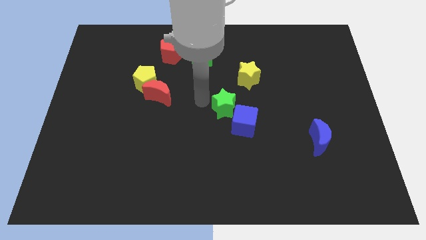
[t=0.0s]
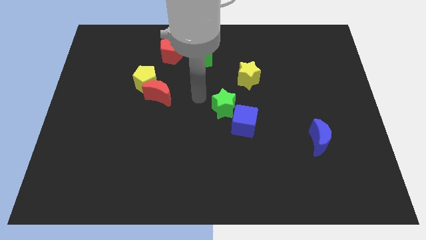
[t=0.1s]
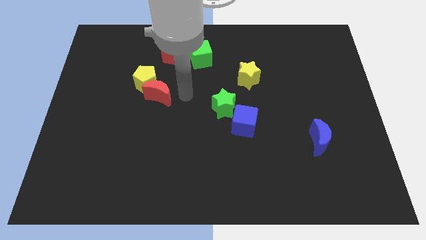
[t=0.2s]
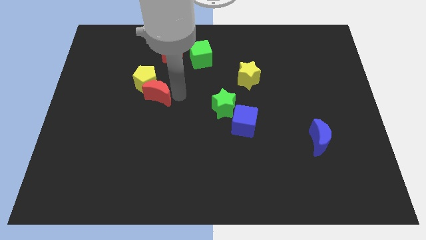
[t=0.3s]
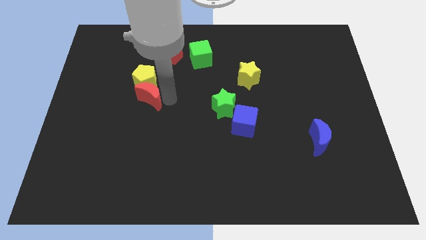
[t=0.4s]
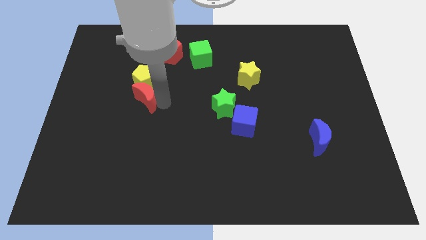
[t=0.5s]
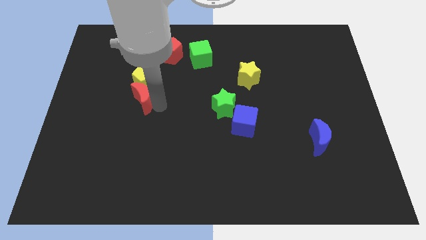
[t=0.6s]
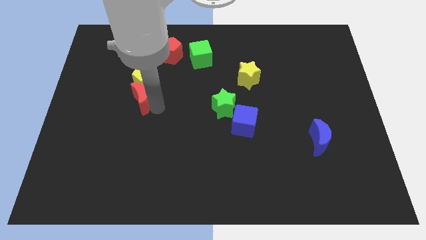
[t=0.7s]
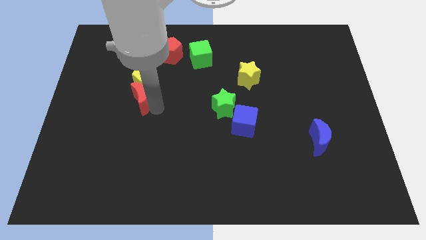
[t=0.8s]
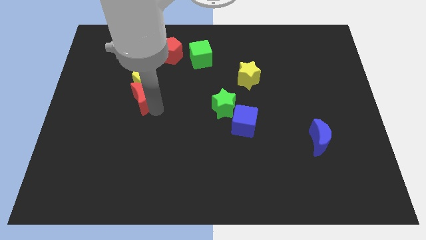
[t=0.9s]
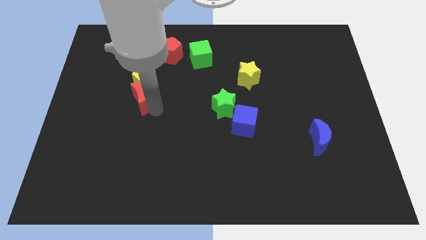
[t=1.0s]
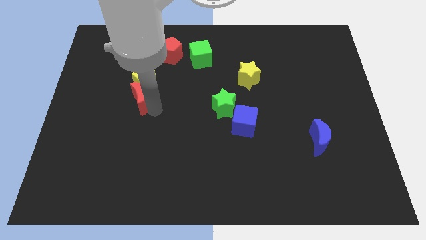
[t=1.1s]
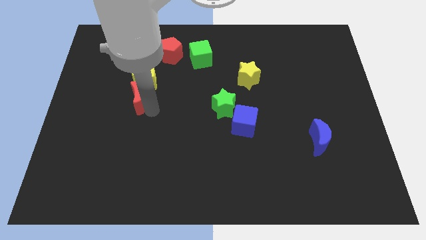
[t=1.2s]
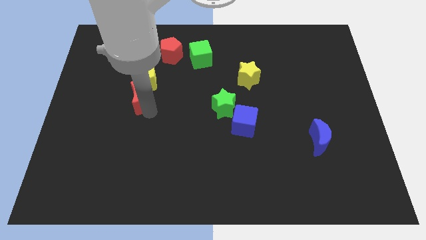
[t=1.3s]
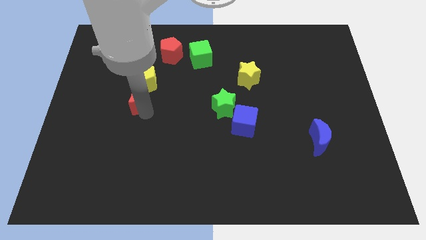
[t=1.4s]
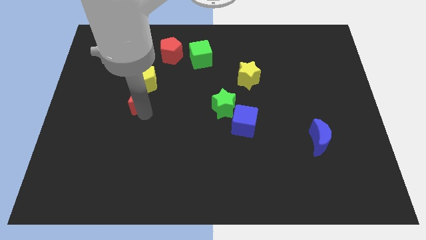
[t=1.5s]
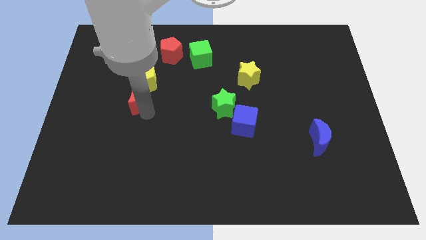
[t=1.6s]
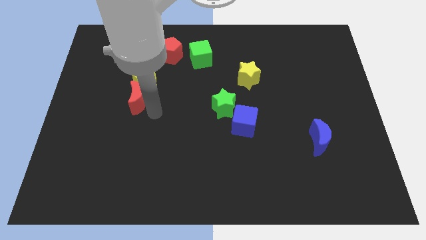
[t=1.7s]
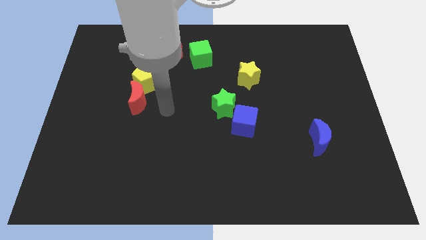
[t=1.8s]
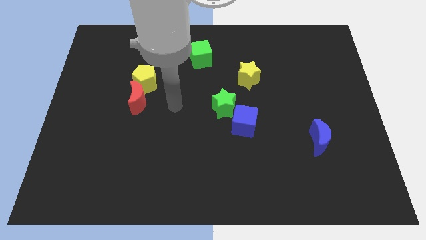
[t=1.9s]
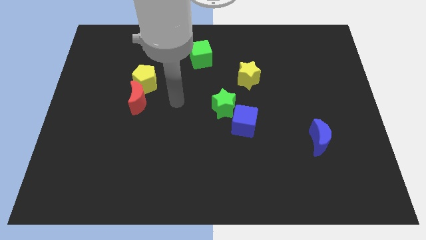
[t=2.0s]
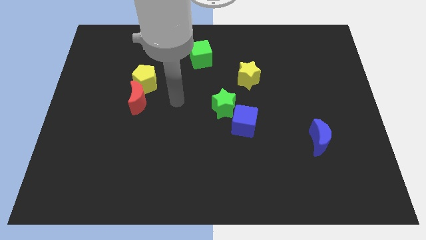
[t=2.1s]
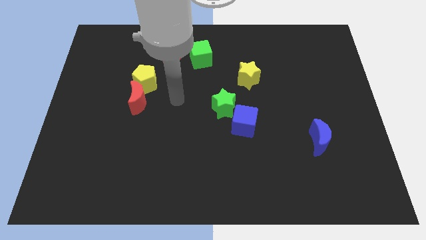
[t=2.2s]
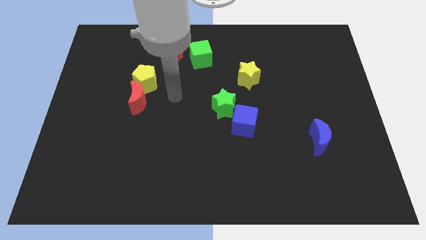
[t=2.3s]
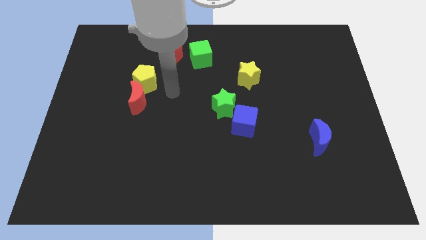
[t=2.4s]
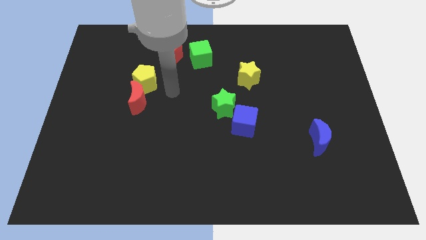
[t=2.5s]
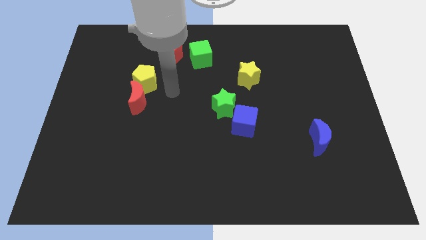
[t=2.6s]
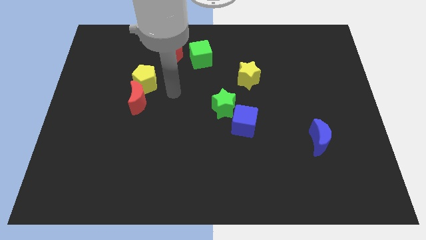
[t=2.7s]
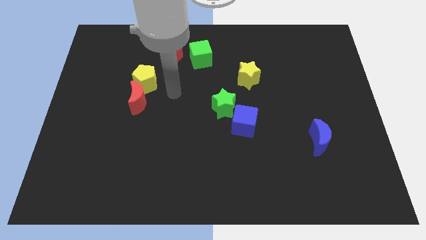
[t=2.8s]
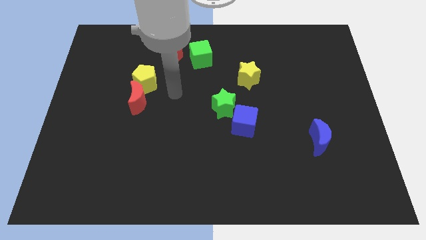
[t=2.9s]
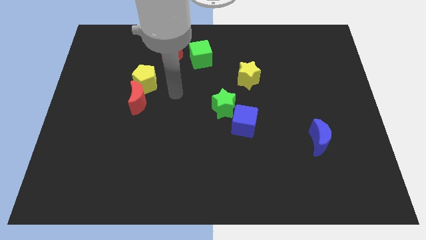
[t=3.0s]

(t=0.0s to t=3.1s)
slide the red crescent slightly to the left

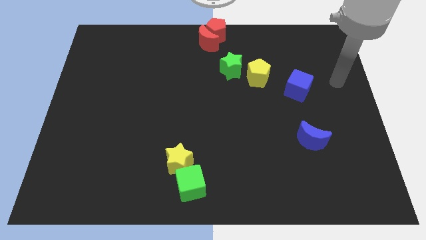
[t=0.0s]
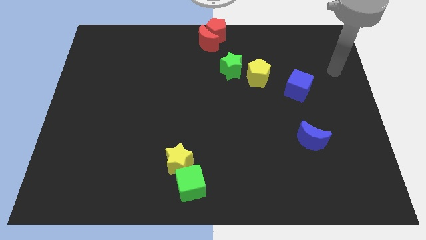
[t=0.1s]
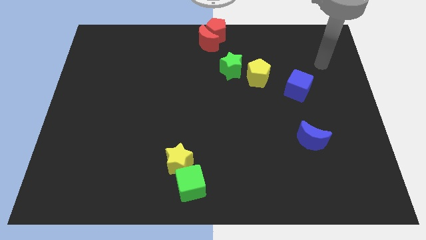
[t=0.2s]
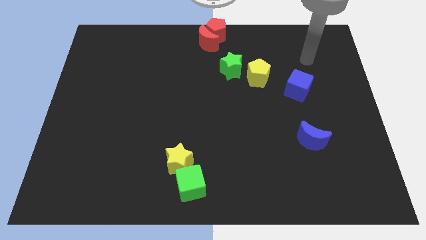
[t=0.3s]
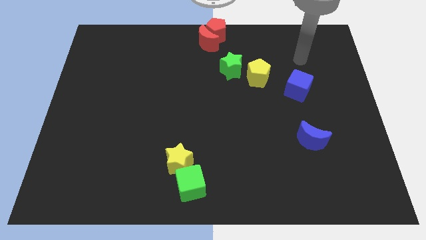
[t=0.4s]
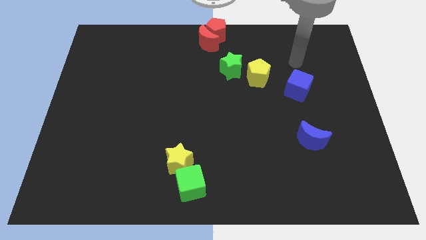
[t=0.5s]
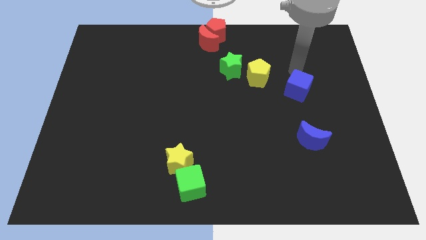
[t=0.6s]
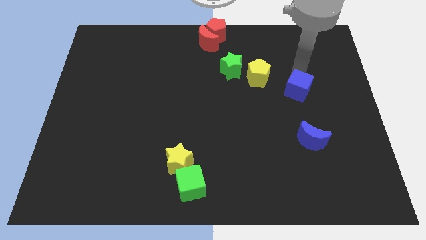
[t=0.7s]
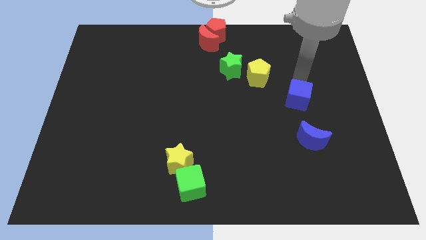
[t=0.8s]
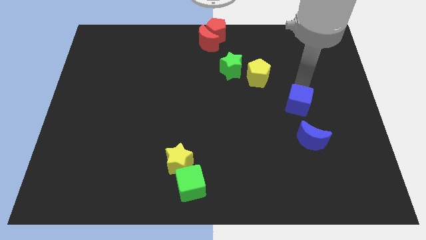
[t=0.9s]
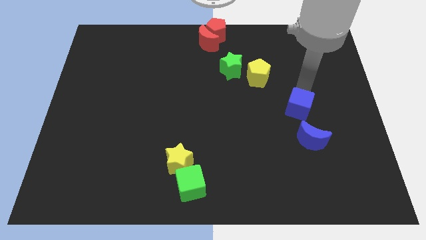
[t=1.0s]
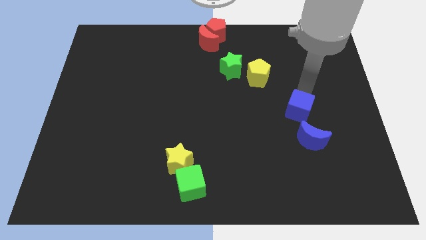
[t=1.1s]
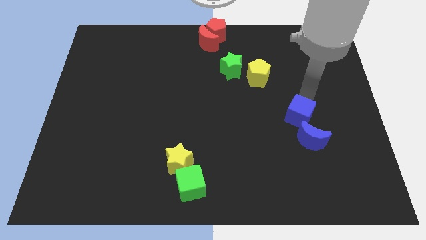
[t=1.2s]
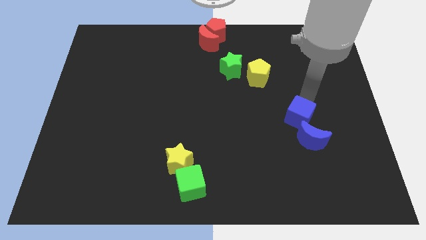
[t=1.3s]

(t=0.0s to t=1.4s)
move the blue cube close to the blue crescent

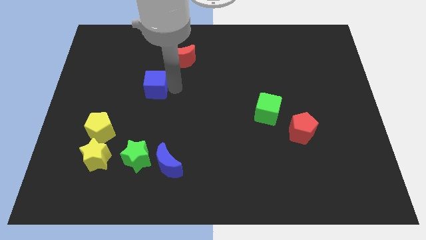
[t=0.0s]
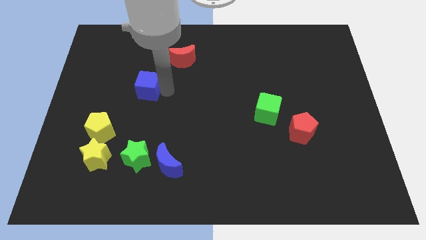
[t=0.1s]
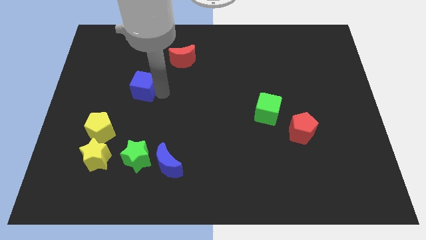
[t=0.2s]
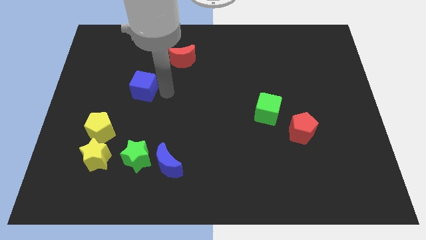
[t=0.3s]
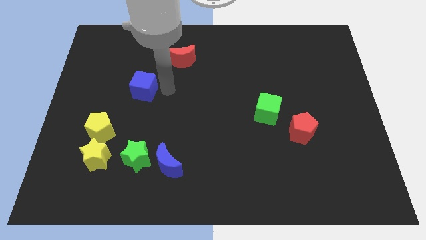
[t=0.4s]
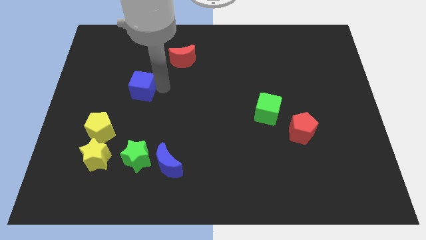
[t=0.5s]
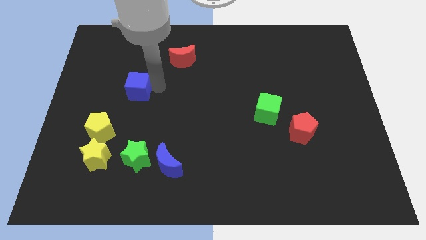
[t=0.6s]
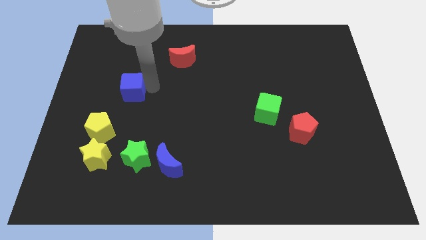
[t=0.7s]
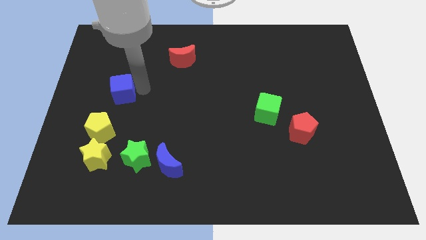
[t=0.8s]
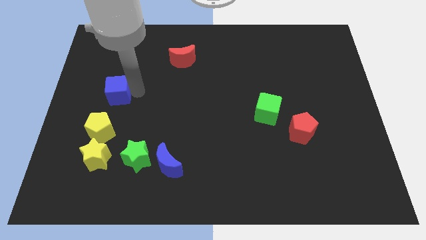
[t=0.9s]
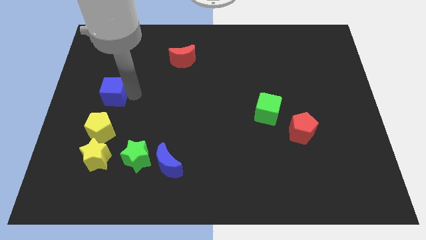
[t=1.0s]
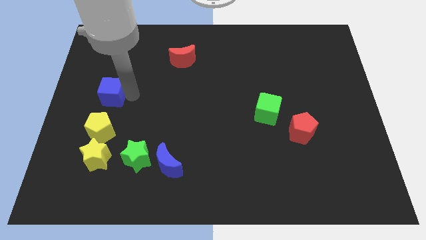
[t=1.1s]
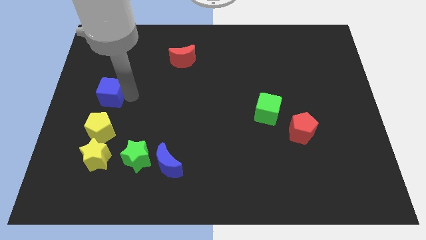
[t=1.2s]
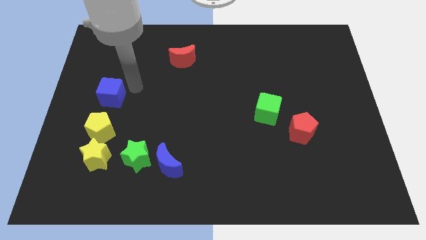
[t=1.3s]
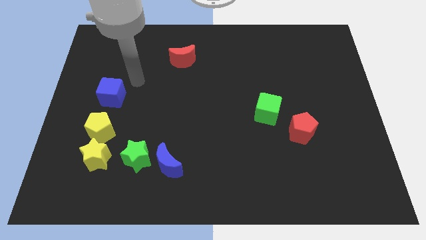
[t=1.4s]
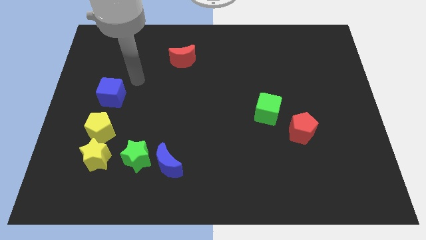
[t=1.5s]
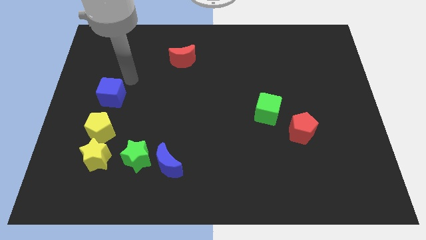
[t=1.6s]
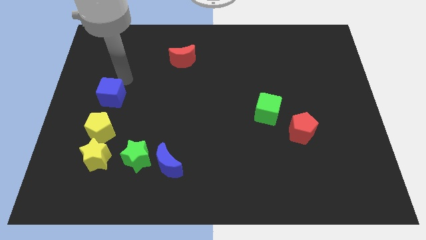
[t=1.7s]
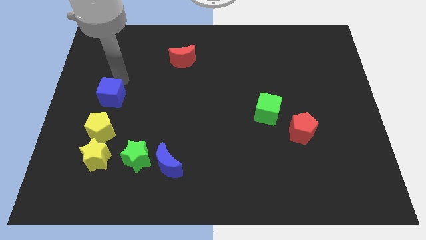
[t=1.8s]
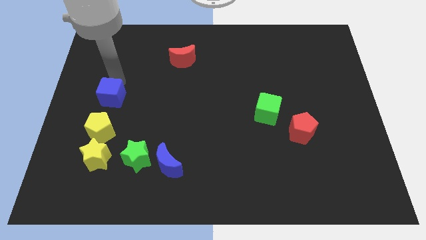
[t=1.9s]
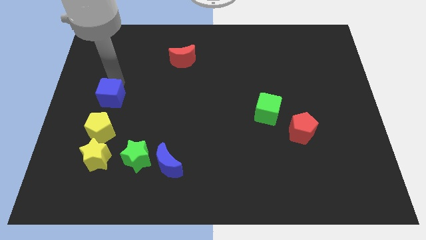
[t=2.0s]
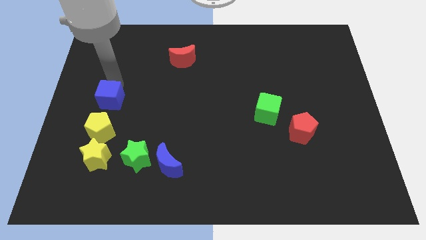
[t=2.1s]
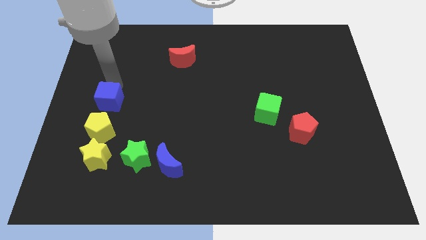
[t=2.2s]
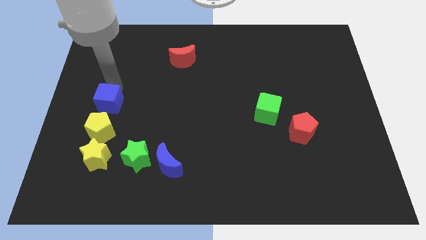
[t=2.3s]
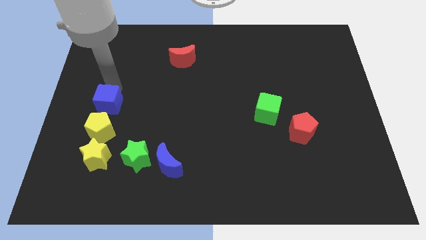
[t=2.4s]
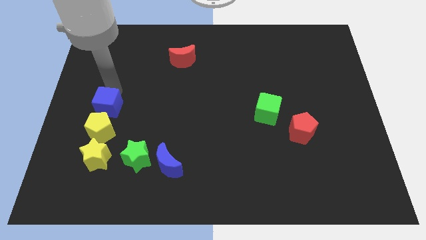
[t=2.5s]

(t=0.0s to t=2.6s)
push the blue cube to the top of yellow pentagon

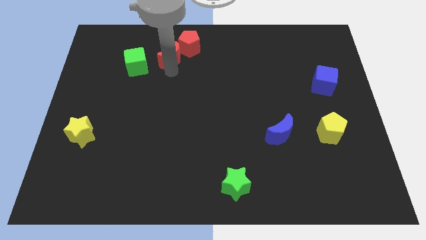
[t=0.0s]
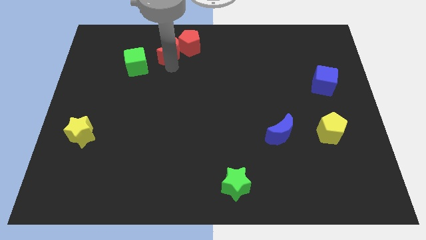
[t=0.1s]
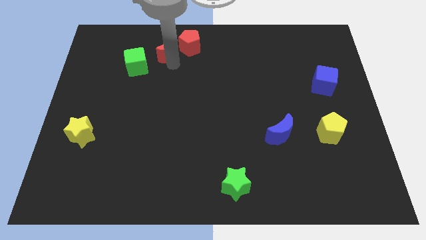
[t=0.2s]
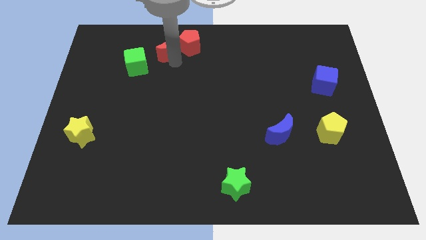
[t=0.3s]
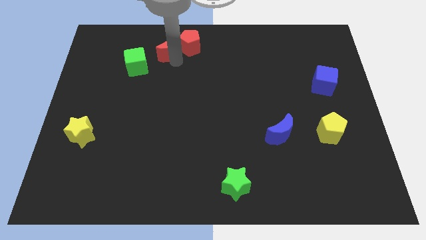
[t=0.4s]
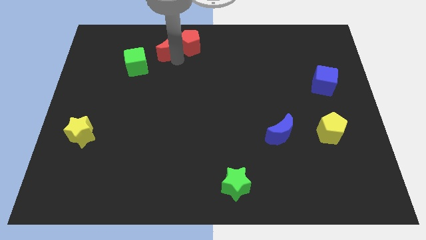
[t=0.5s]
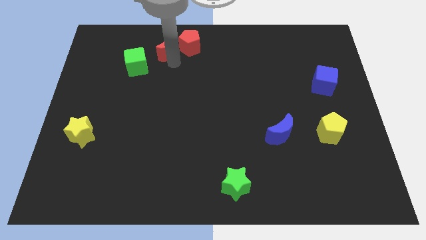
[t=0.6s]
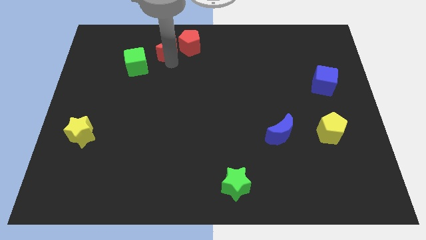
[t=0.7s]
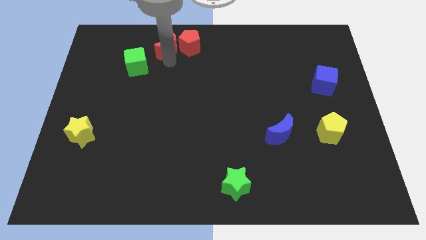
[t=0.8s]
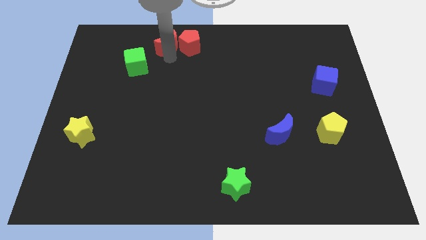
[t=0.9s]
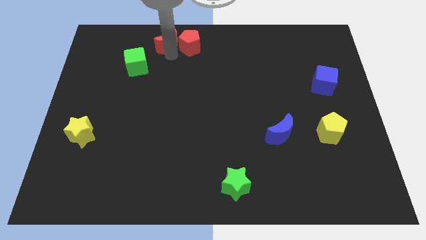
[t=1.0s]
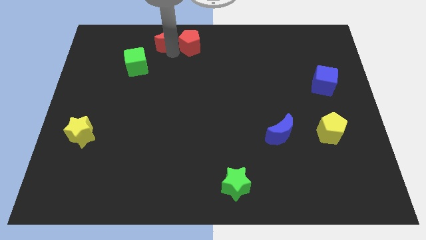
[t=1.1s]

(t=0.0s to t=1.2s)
separate the red moon and red pentagon

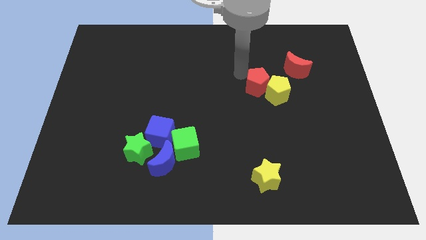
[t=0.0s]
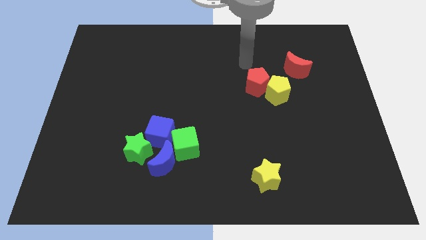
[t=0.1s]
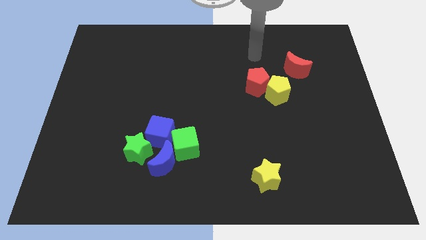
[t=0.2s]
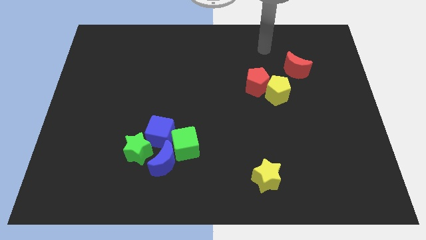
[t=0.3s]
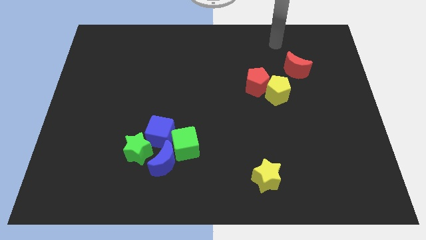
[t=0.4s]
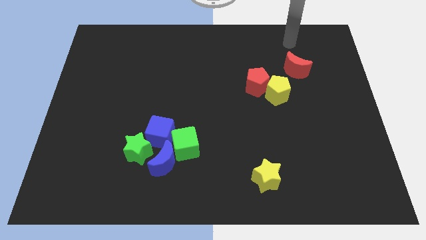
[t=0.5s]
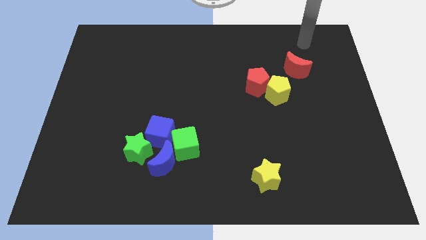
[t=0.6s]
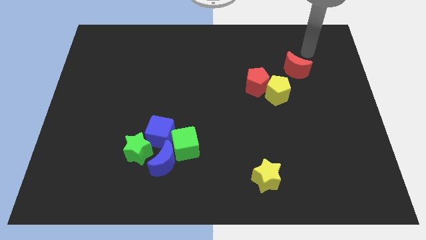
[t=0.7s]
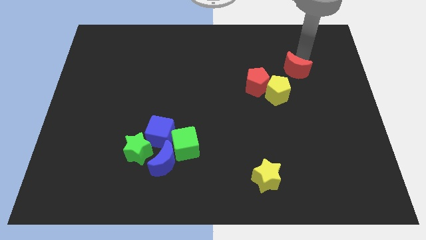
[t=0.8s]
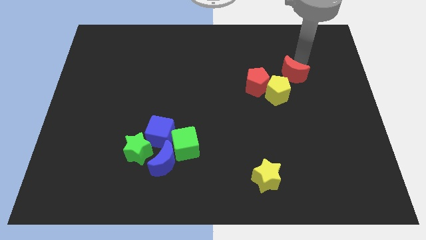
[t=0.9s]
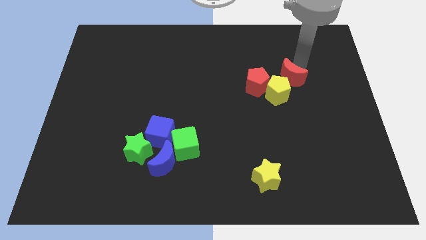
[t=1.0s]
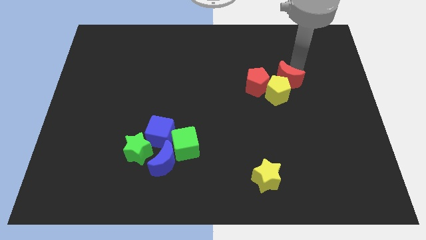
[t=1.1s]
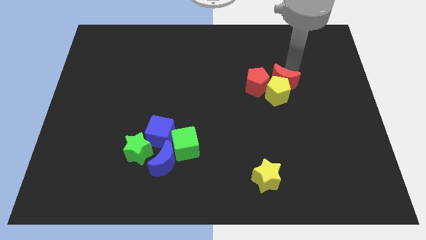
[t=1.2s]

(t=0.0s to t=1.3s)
move the red crescent into the top side of the yellow pentagon
